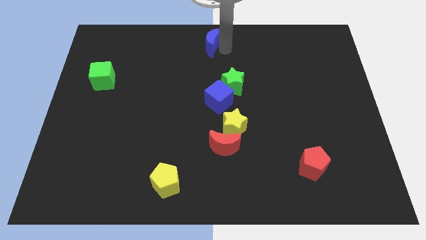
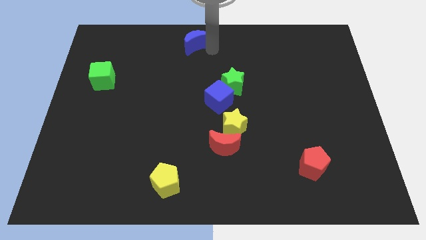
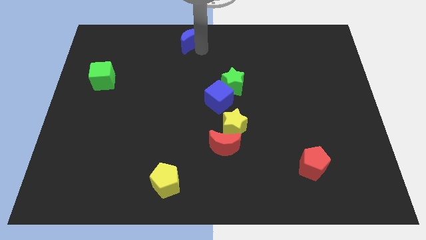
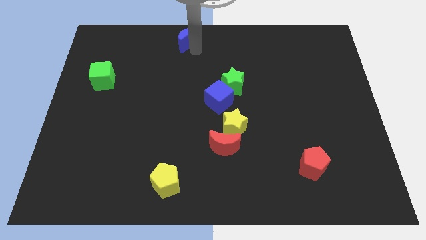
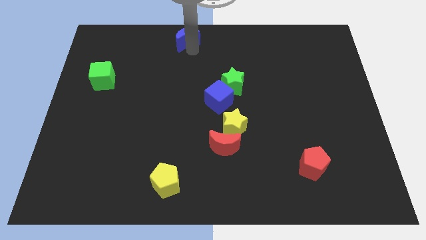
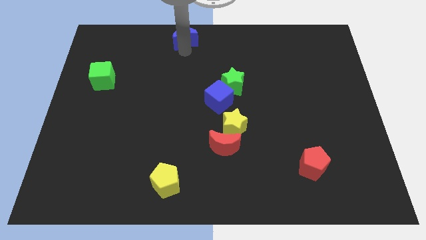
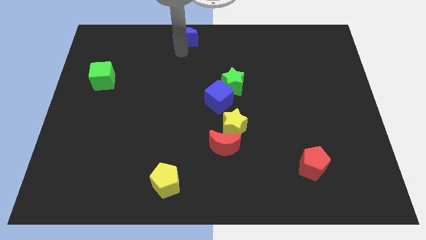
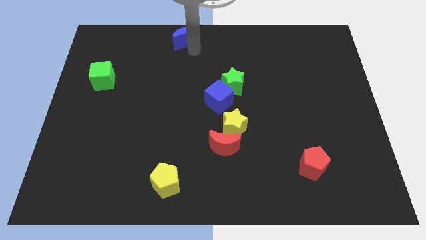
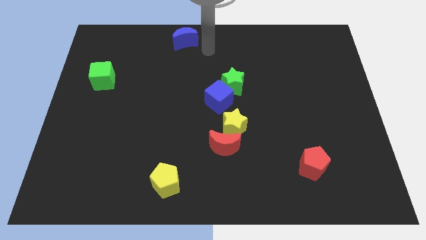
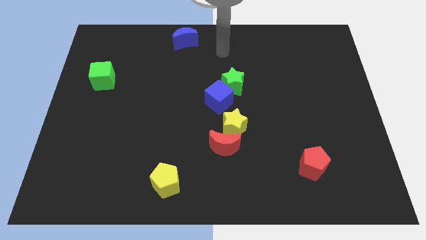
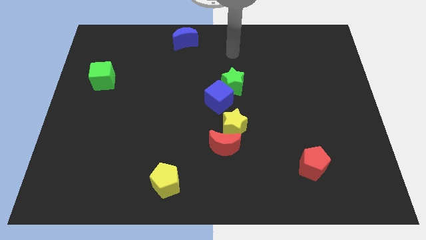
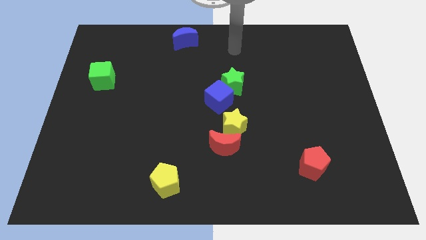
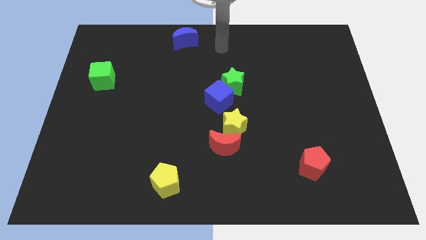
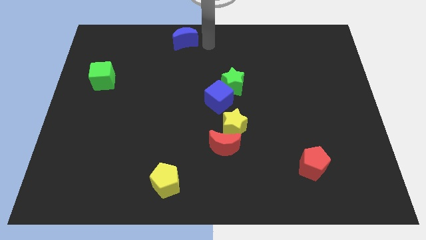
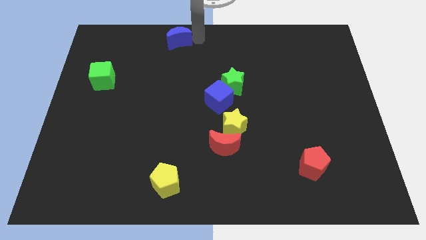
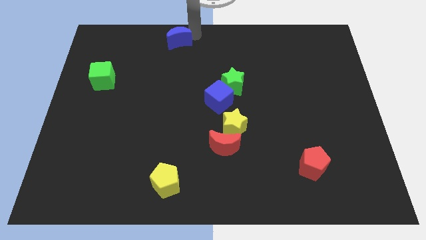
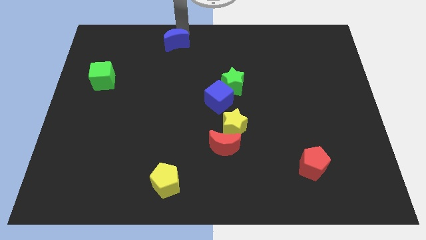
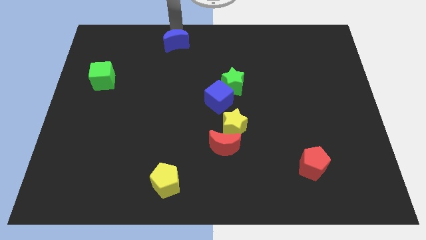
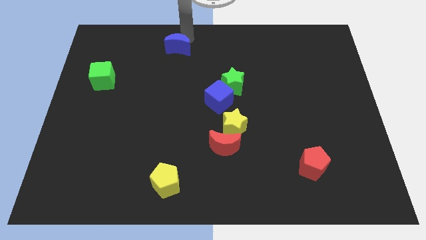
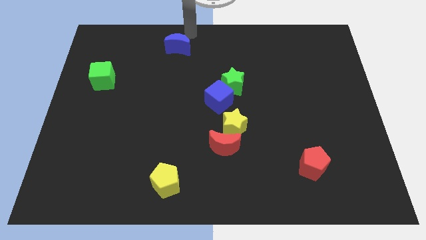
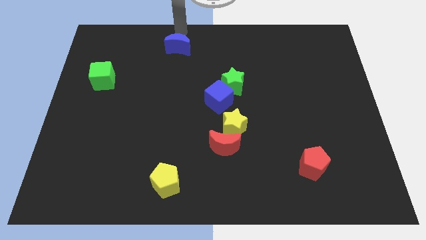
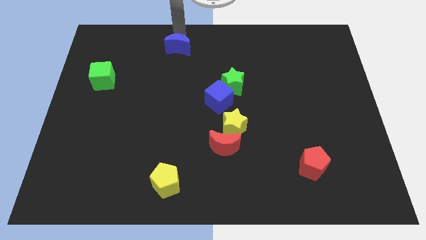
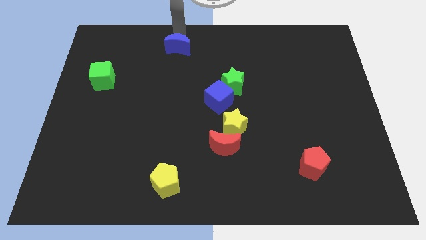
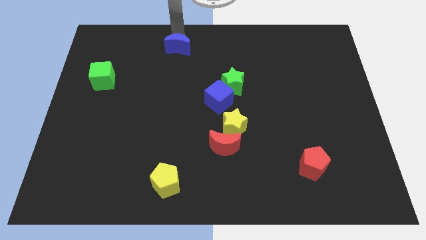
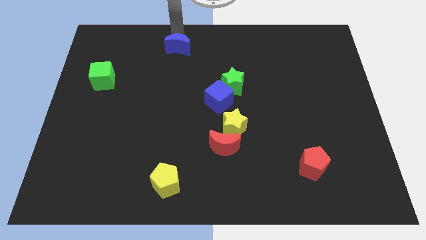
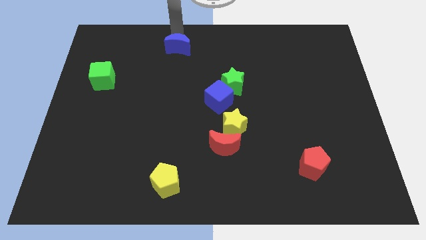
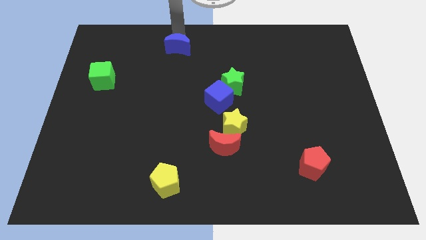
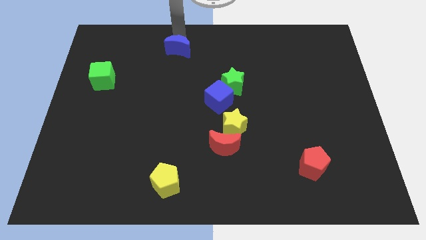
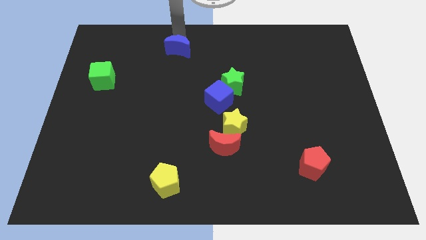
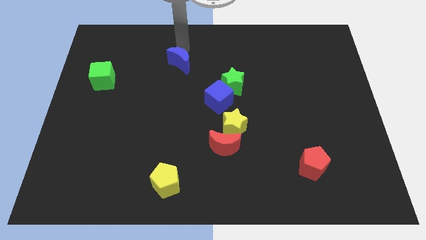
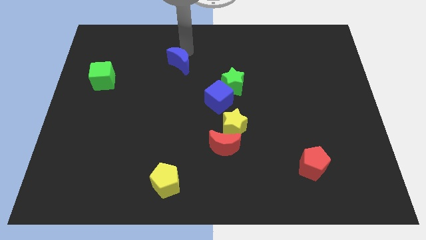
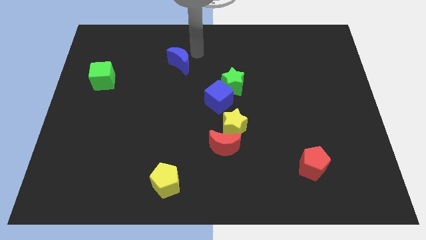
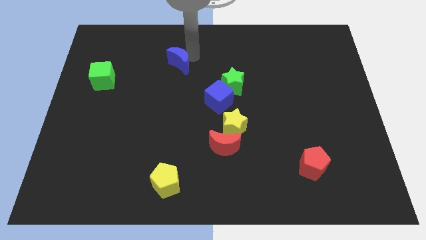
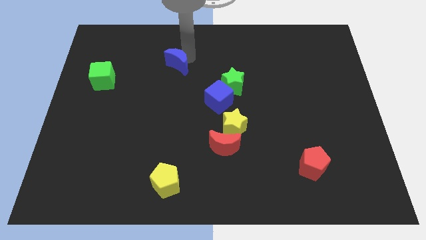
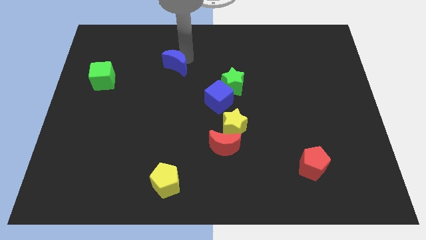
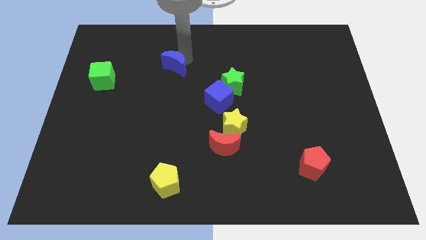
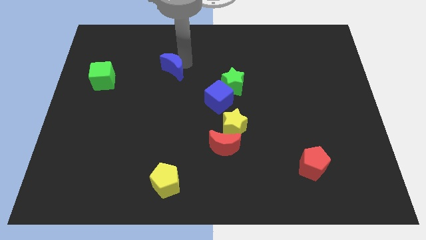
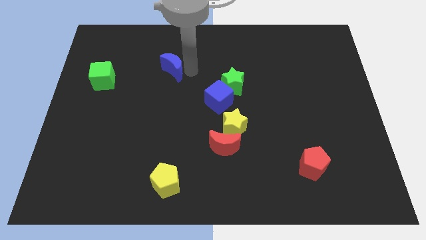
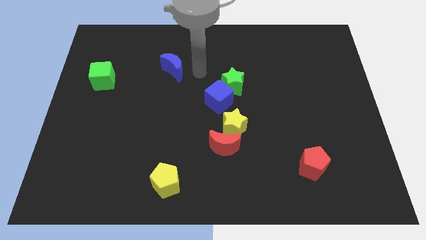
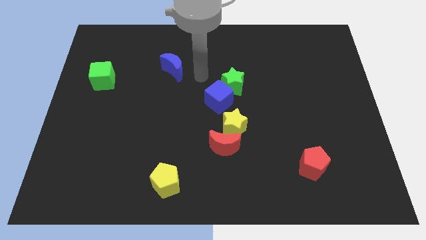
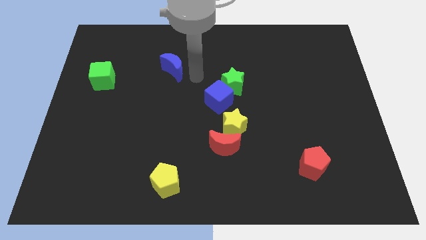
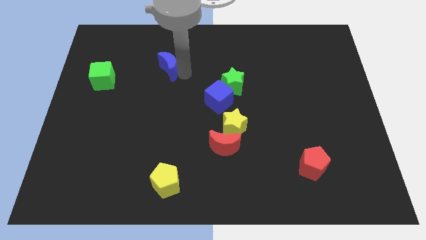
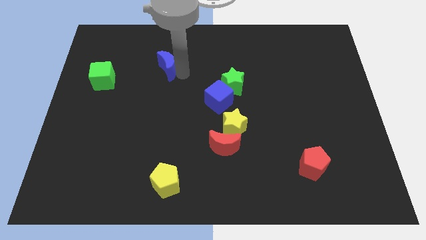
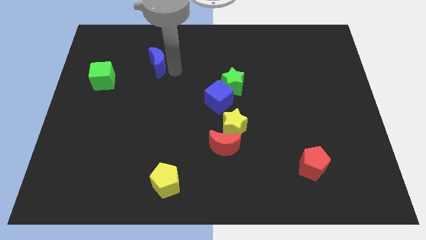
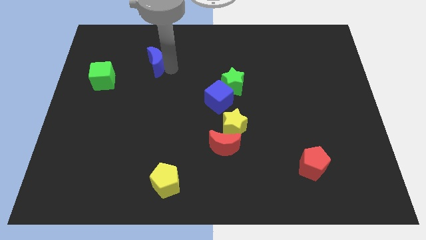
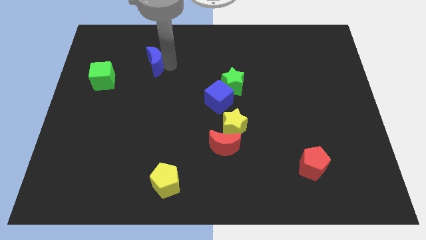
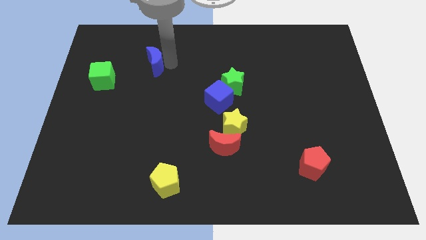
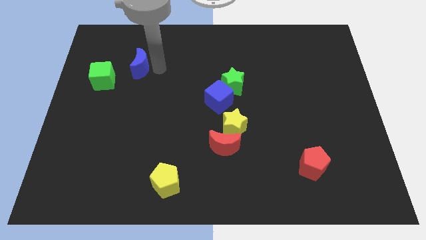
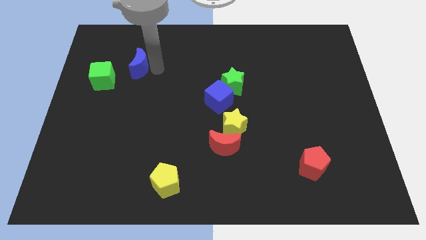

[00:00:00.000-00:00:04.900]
move the blue crescent towards the right side of the green cube

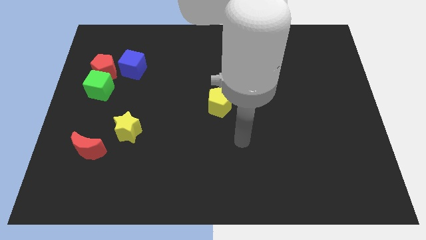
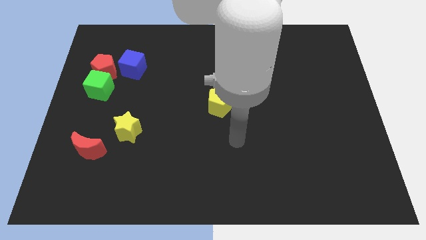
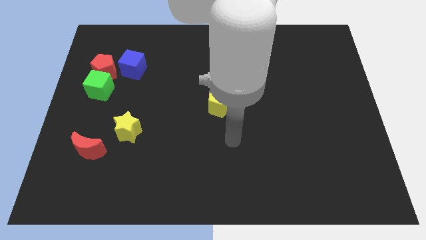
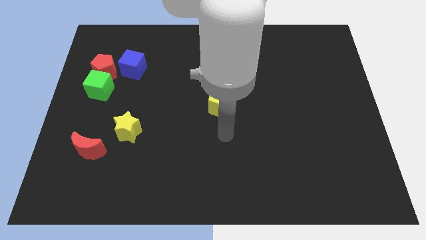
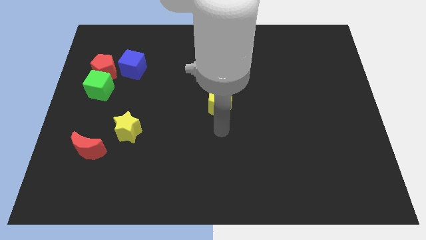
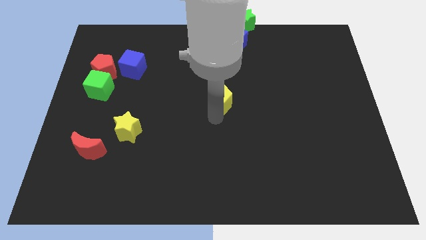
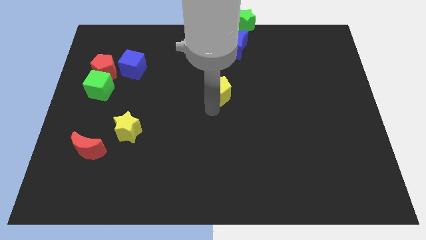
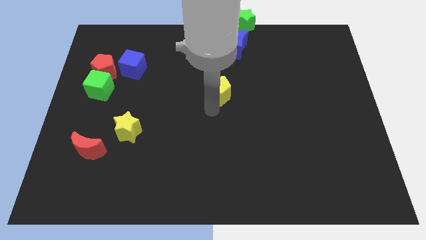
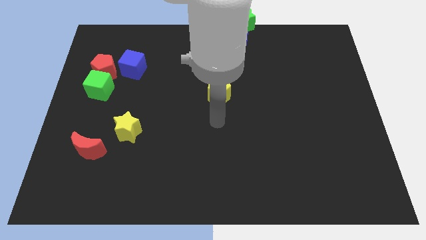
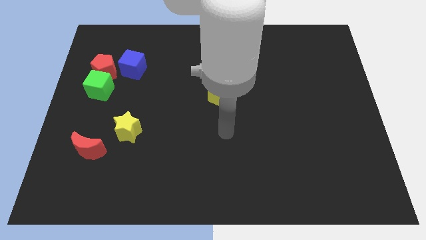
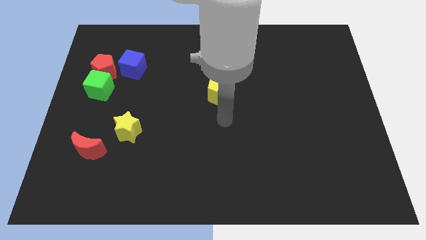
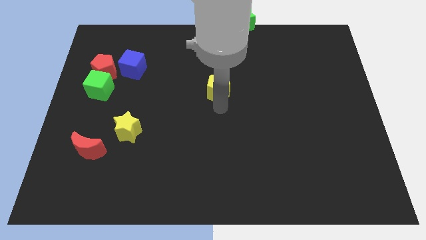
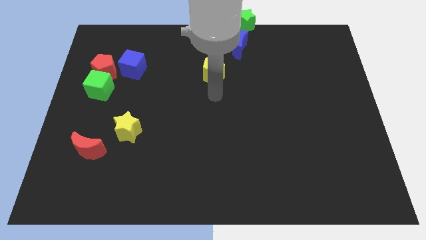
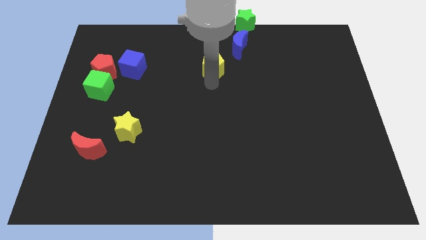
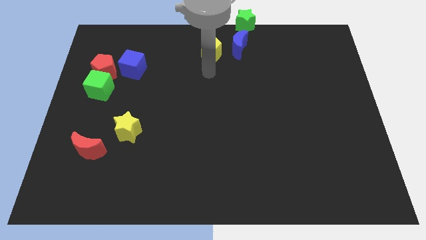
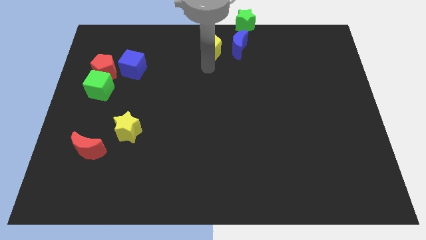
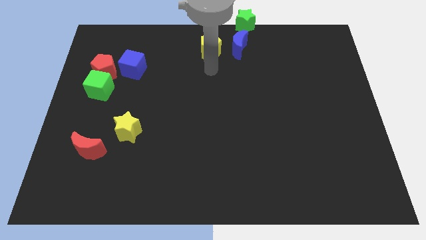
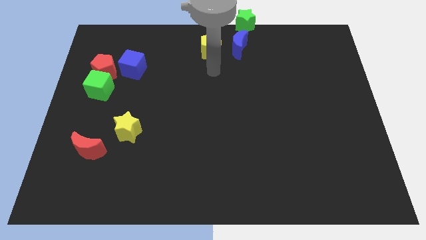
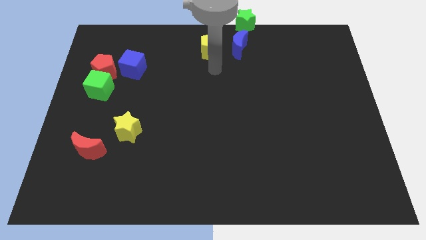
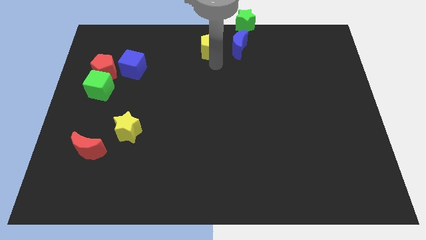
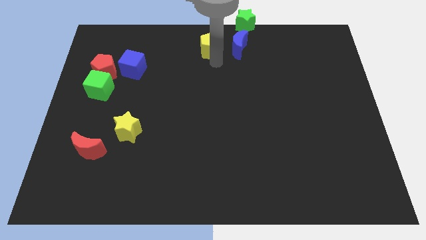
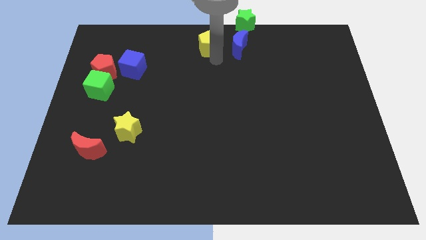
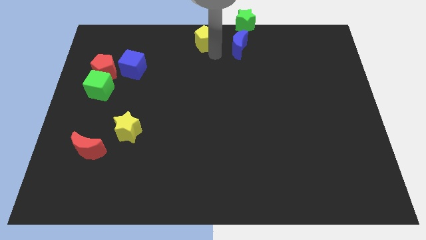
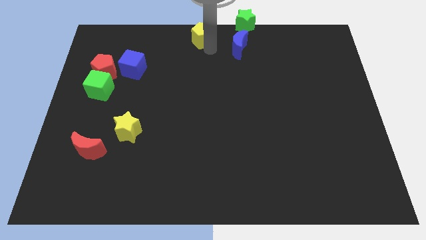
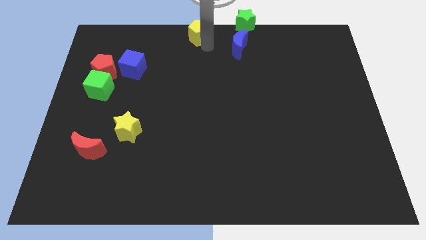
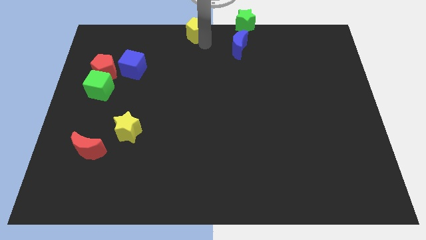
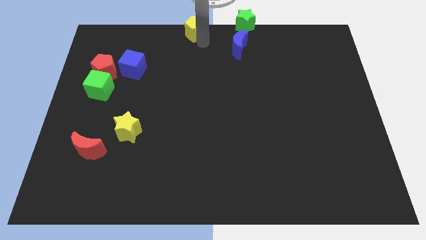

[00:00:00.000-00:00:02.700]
move the yellow pentagon to the top center of the board

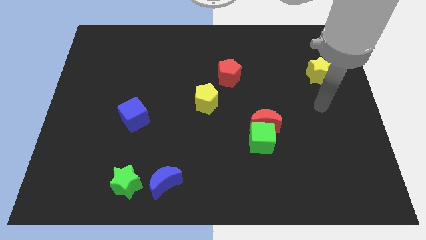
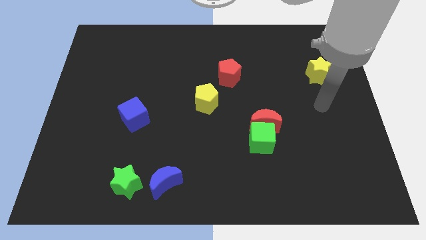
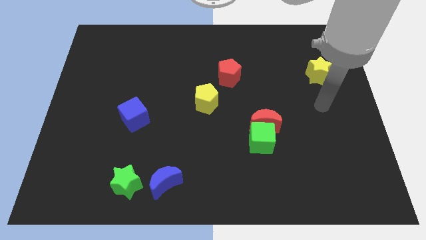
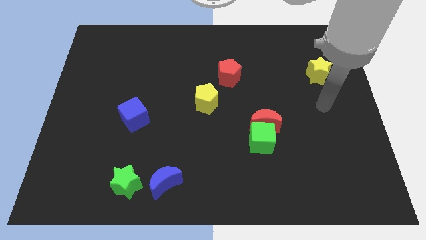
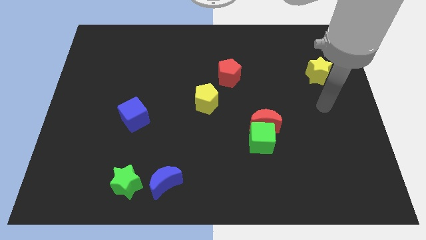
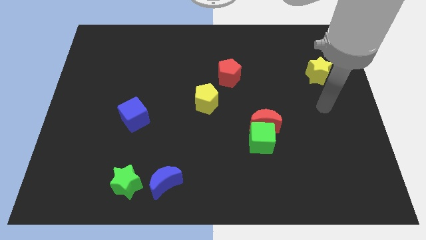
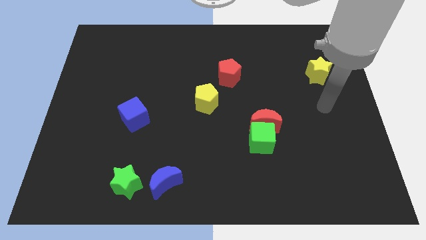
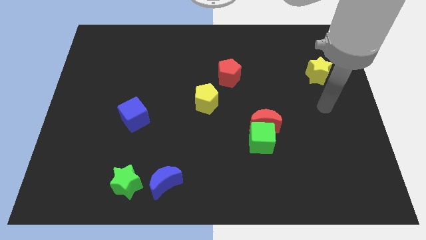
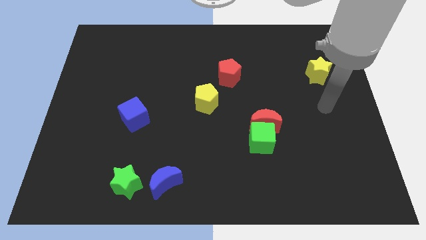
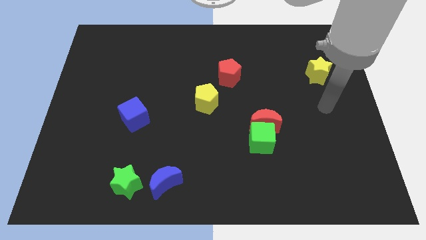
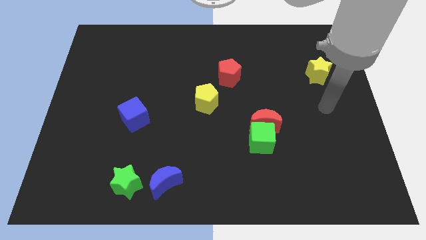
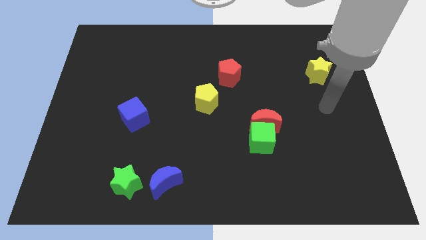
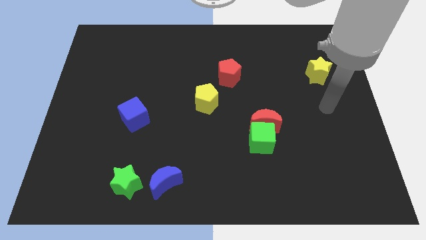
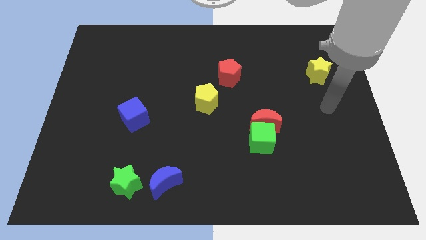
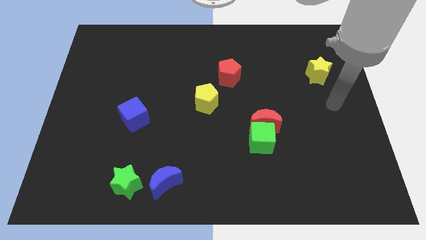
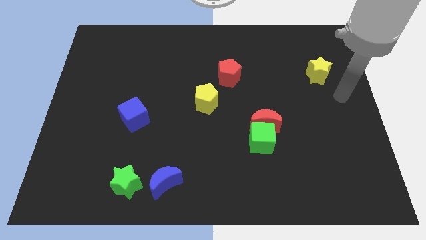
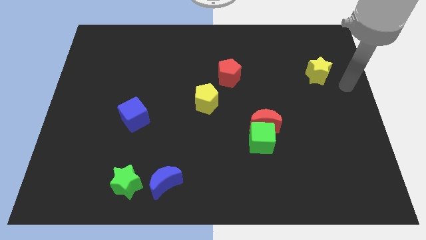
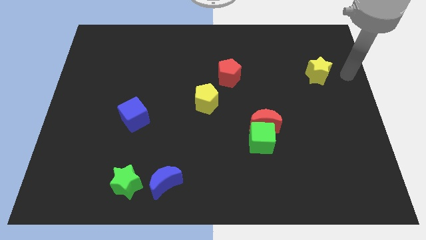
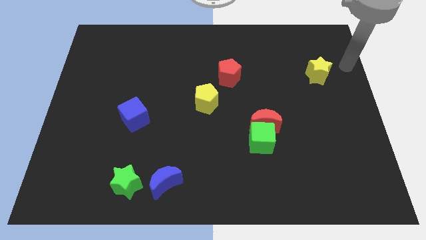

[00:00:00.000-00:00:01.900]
place your arm to the right of the yellow star
